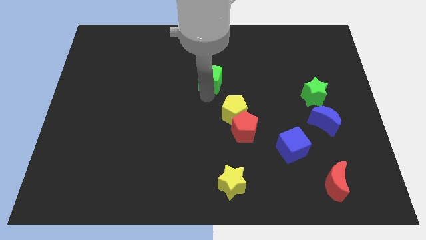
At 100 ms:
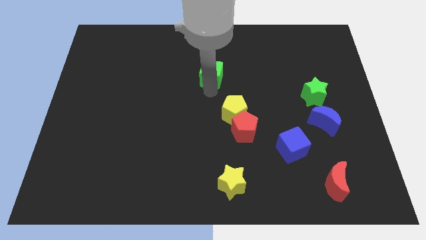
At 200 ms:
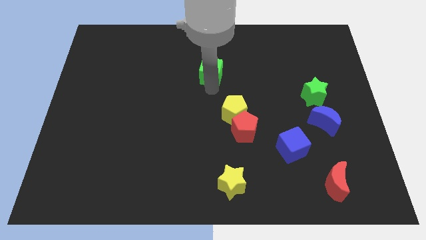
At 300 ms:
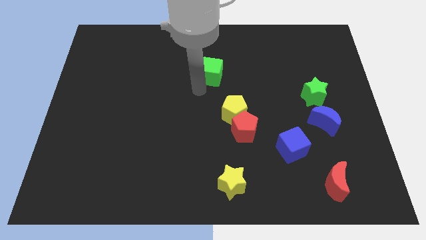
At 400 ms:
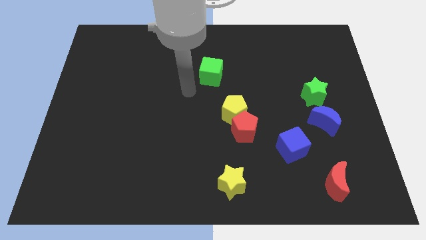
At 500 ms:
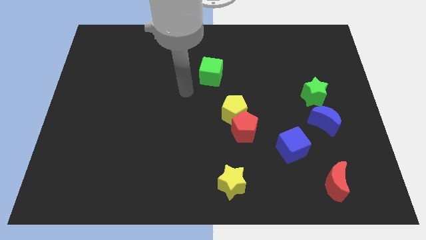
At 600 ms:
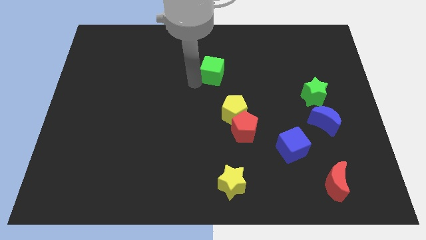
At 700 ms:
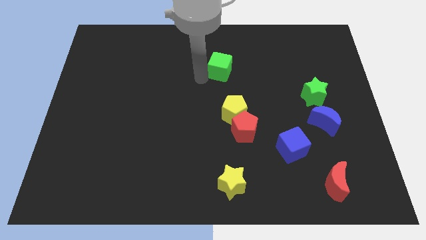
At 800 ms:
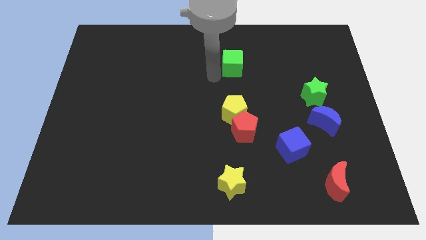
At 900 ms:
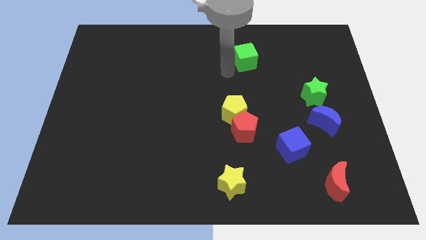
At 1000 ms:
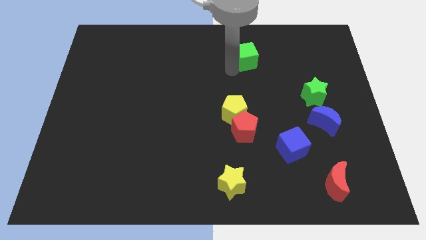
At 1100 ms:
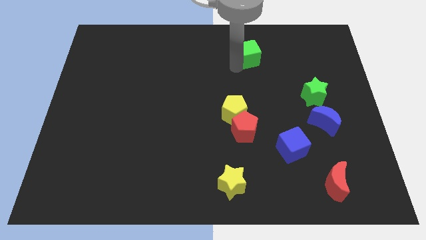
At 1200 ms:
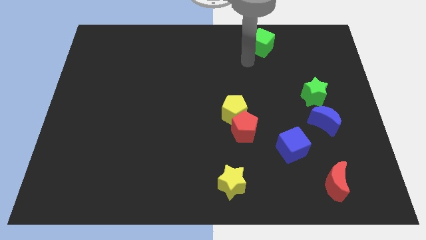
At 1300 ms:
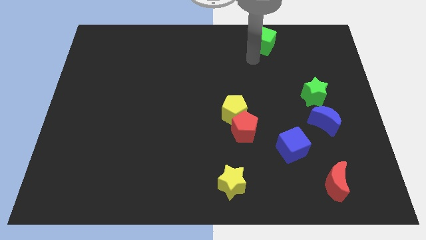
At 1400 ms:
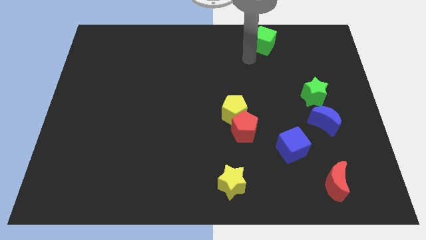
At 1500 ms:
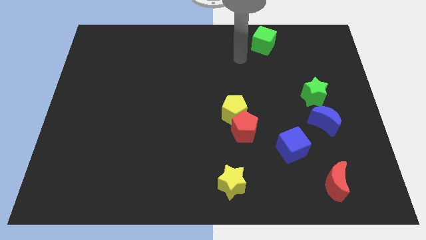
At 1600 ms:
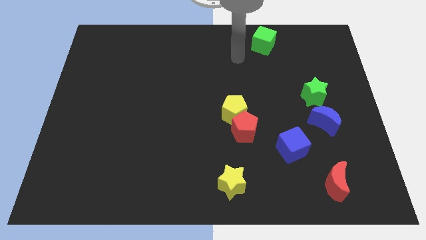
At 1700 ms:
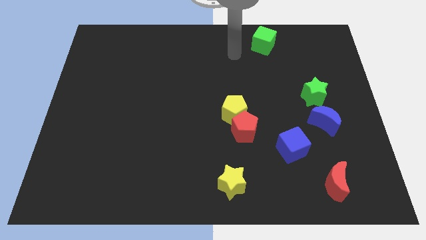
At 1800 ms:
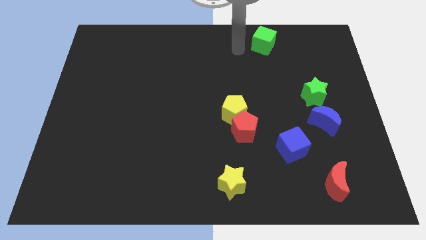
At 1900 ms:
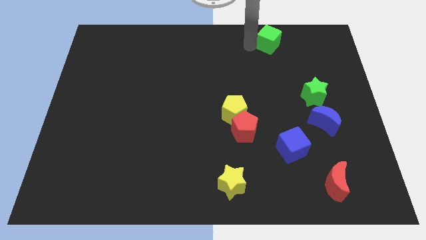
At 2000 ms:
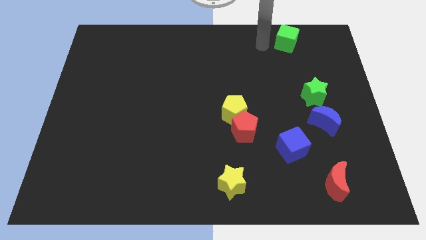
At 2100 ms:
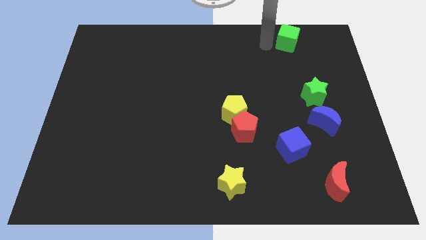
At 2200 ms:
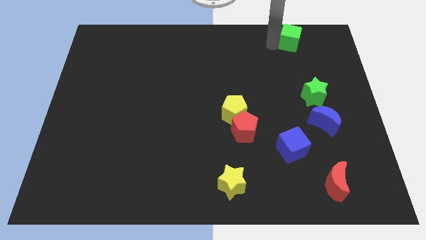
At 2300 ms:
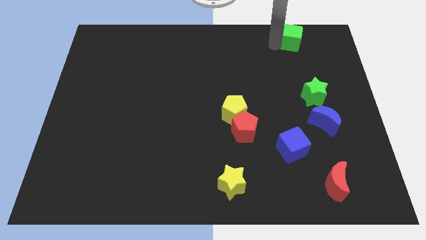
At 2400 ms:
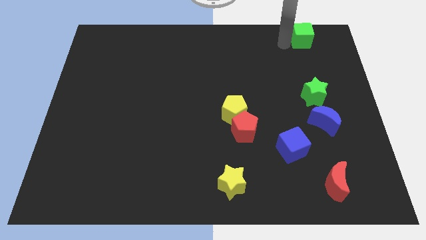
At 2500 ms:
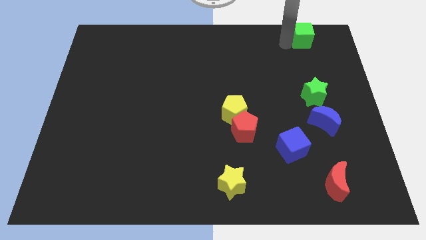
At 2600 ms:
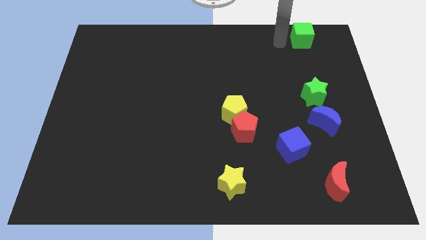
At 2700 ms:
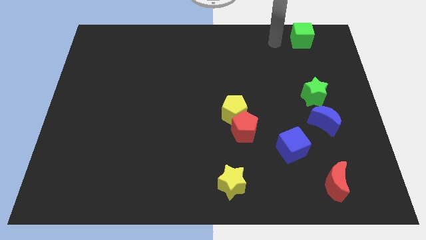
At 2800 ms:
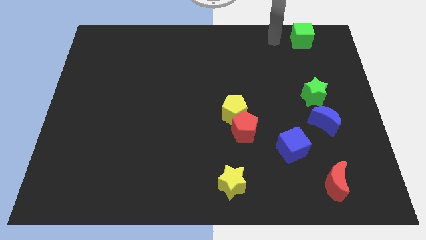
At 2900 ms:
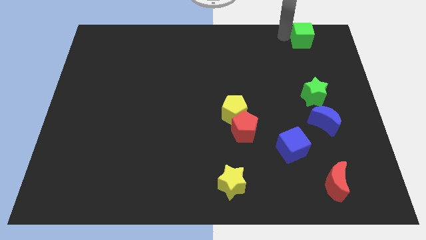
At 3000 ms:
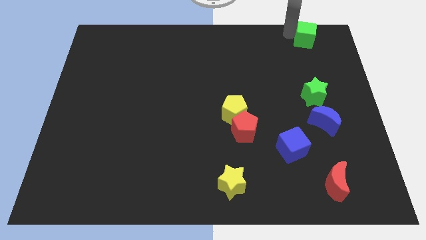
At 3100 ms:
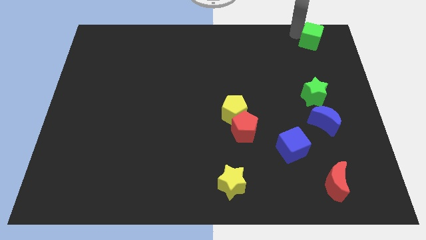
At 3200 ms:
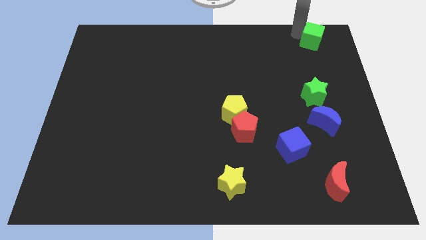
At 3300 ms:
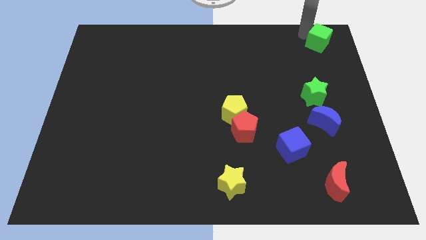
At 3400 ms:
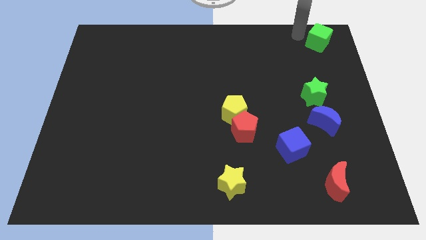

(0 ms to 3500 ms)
slide the green cube to the top right side of the table

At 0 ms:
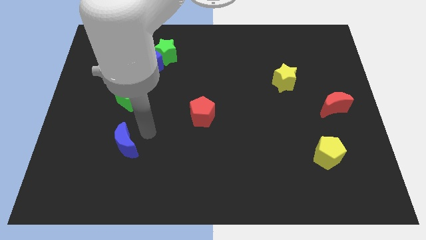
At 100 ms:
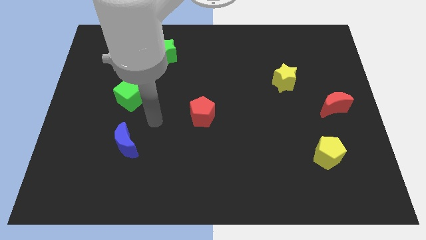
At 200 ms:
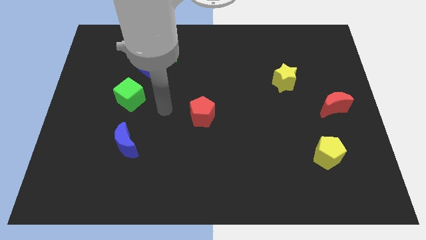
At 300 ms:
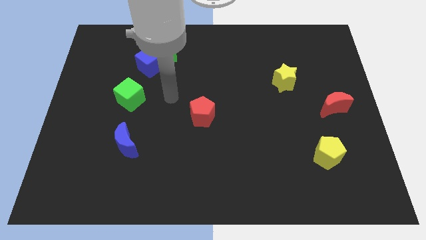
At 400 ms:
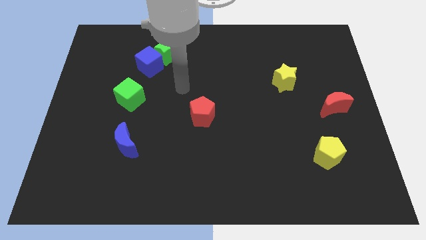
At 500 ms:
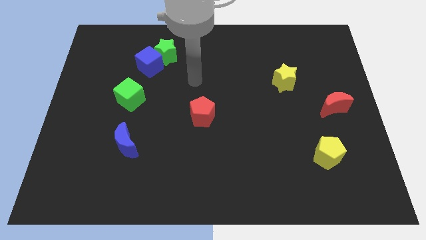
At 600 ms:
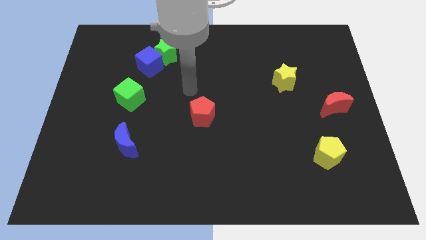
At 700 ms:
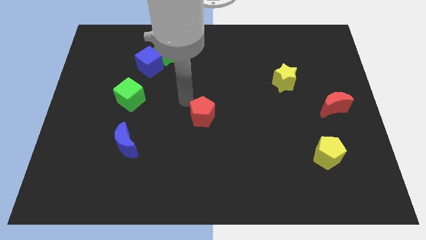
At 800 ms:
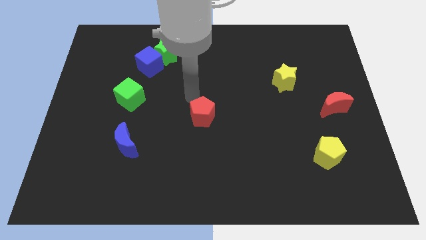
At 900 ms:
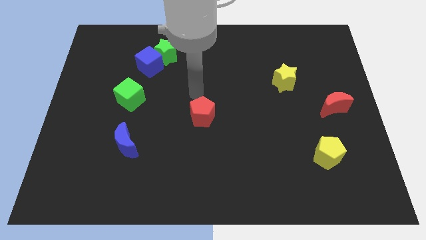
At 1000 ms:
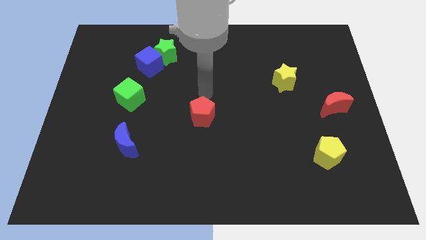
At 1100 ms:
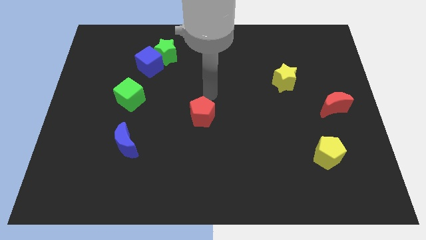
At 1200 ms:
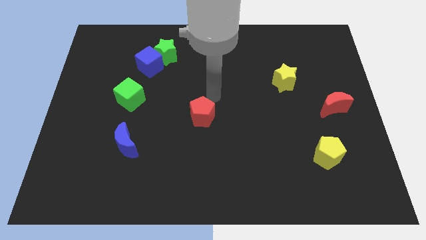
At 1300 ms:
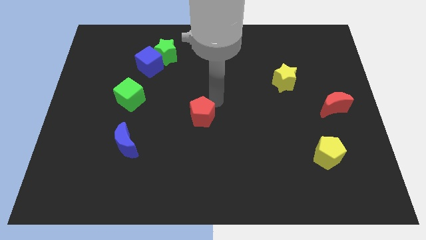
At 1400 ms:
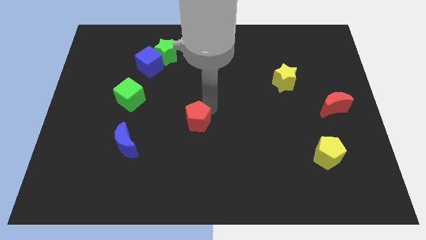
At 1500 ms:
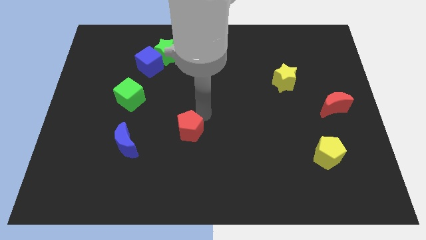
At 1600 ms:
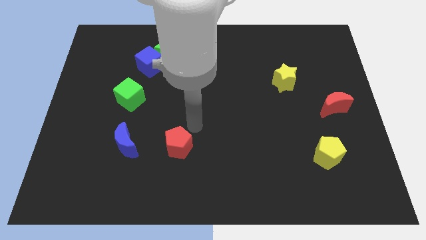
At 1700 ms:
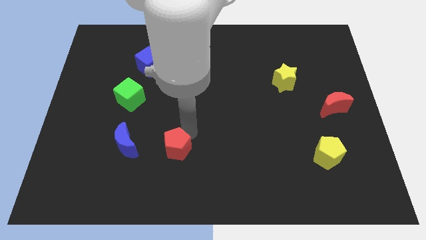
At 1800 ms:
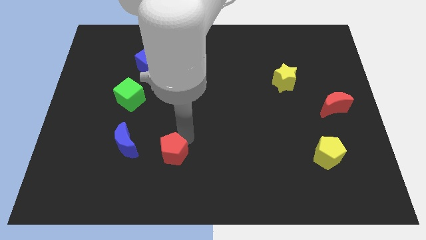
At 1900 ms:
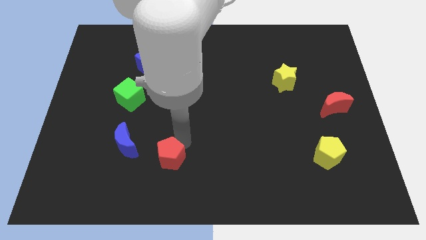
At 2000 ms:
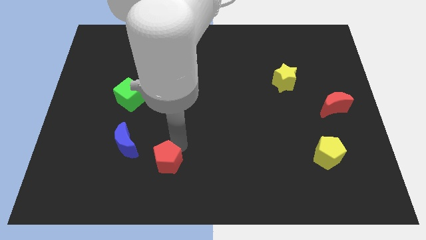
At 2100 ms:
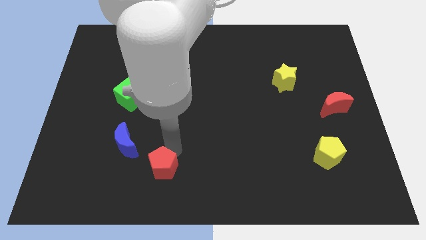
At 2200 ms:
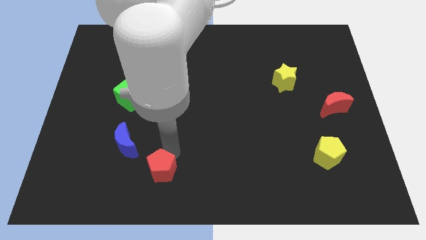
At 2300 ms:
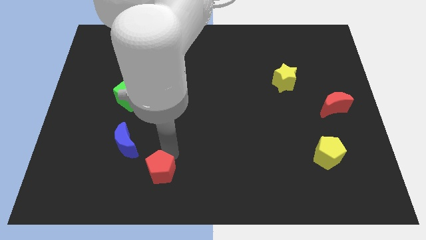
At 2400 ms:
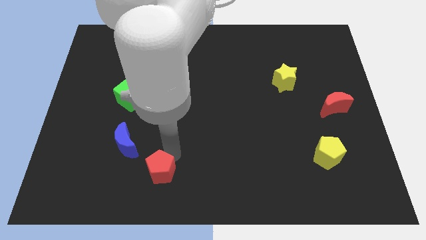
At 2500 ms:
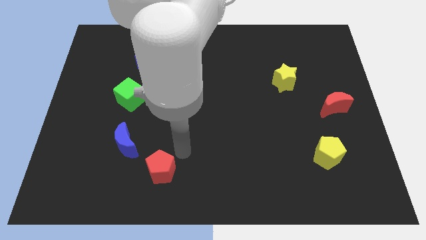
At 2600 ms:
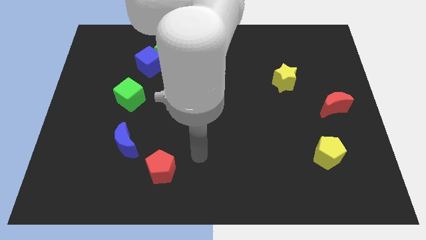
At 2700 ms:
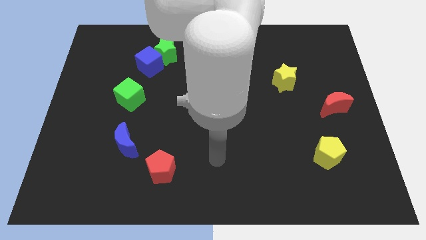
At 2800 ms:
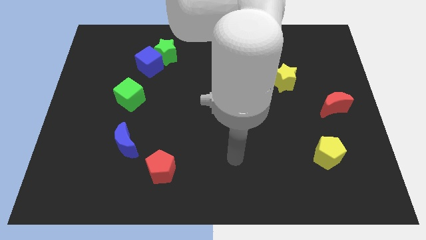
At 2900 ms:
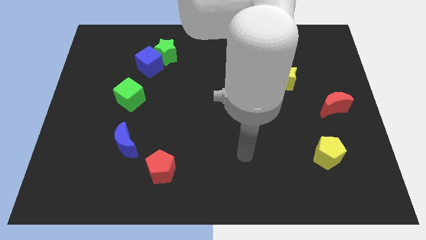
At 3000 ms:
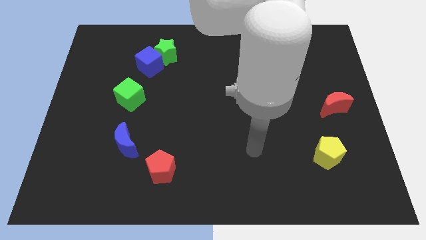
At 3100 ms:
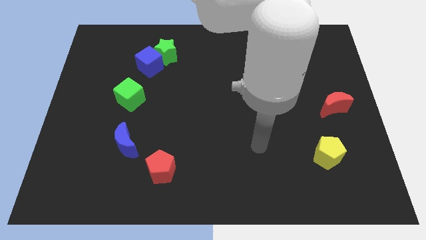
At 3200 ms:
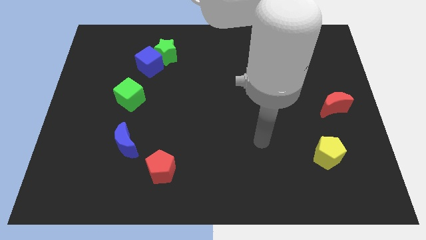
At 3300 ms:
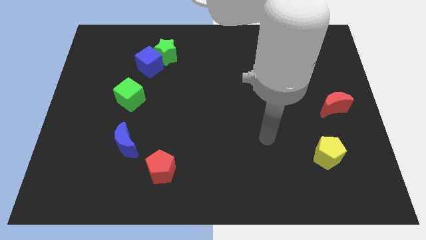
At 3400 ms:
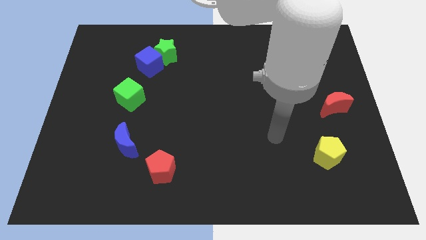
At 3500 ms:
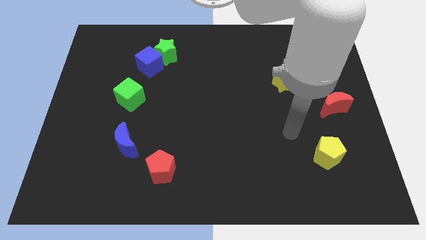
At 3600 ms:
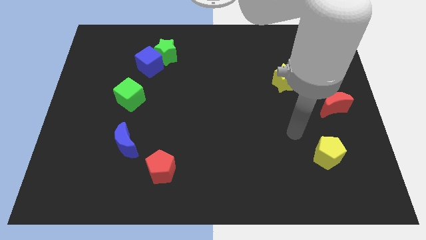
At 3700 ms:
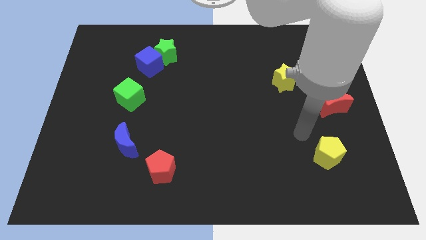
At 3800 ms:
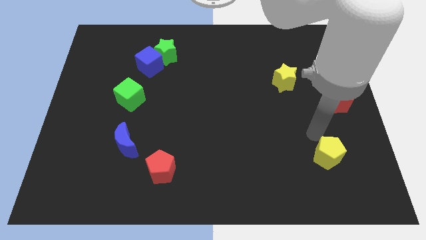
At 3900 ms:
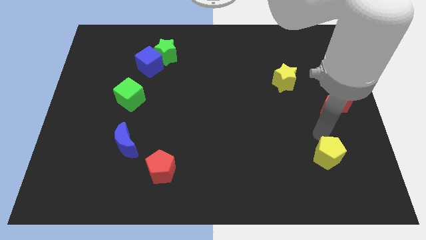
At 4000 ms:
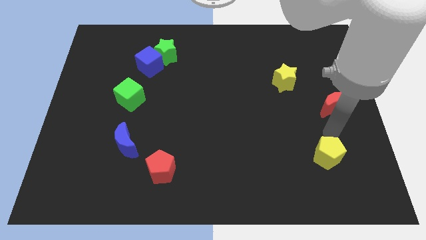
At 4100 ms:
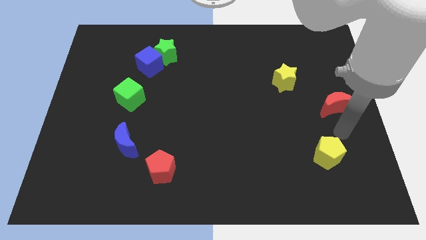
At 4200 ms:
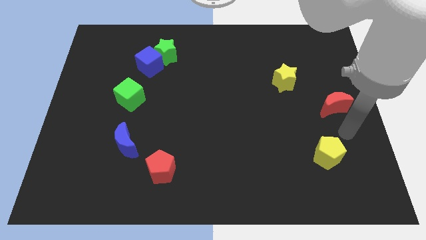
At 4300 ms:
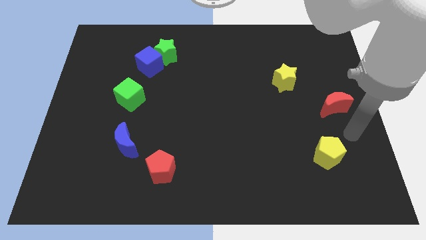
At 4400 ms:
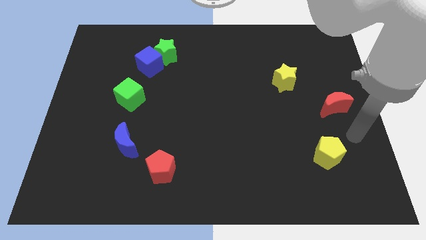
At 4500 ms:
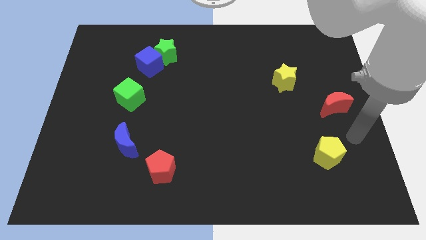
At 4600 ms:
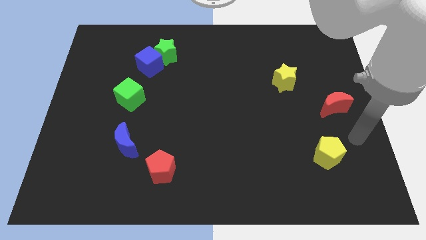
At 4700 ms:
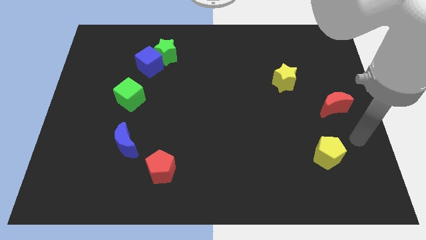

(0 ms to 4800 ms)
place the red pentagon to the left of the yellow pentagon

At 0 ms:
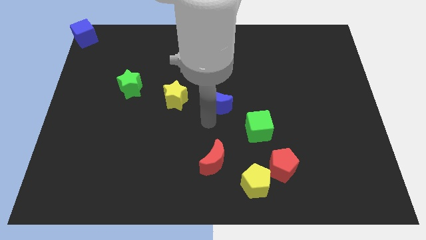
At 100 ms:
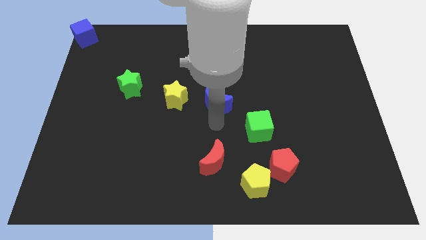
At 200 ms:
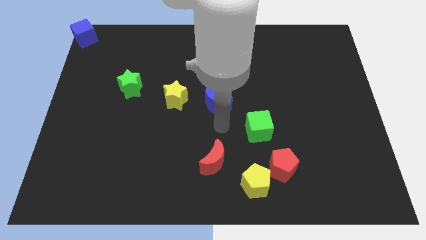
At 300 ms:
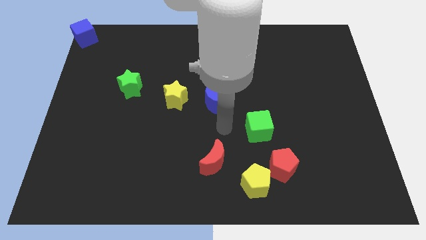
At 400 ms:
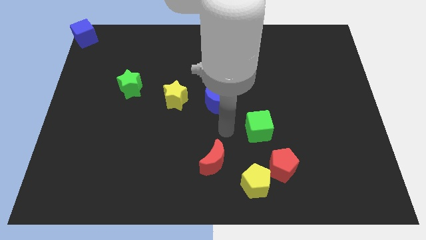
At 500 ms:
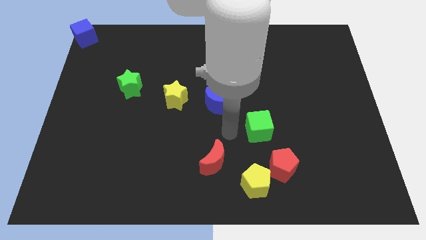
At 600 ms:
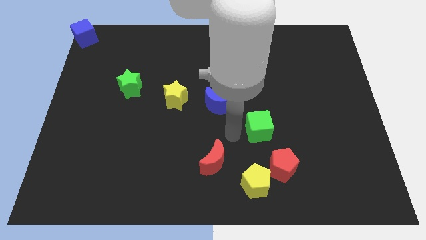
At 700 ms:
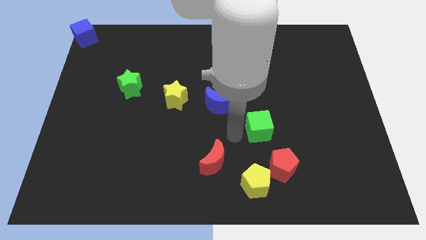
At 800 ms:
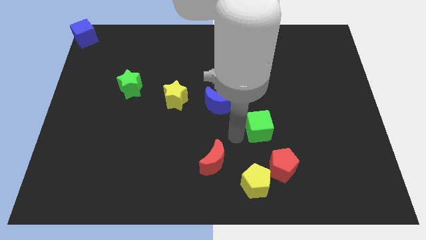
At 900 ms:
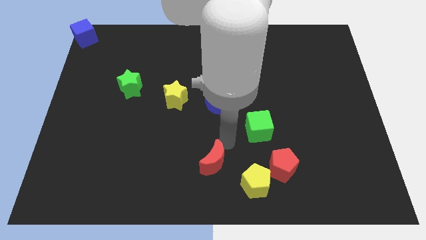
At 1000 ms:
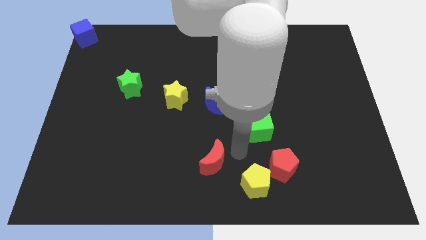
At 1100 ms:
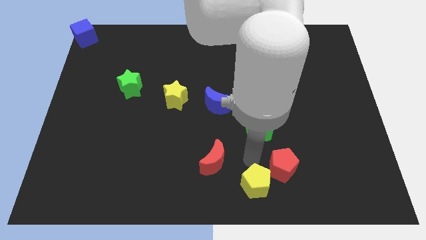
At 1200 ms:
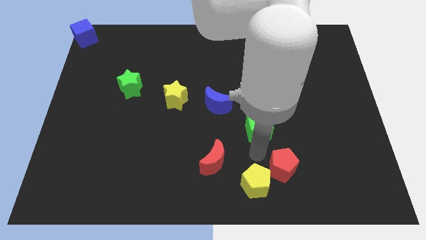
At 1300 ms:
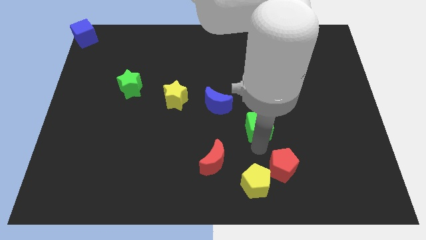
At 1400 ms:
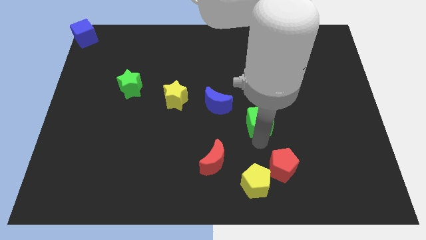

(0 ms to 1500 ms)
touch the bottom side of the green cube
